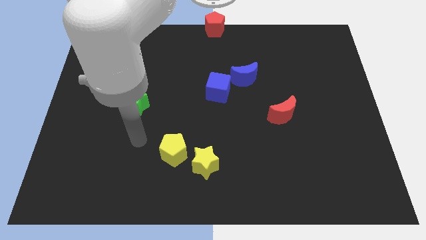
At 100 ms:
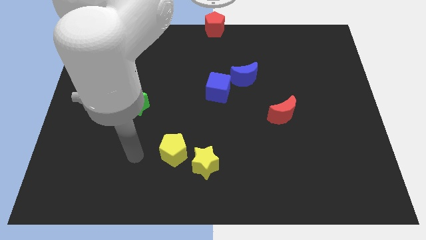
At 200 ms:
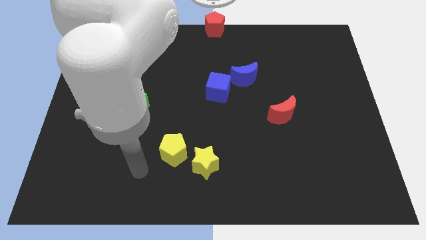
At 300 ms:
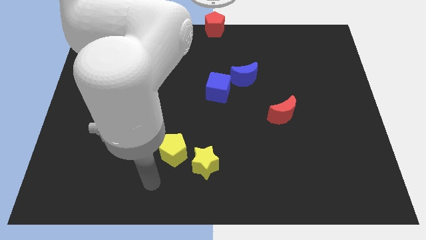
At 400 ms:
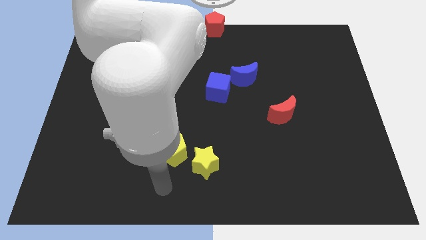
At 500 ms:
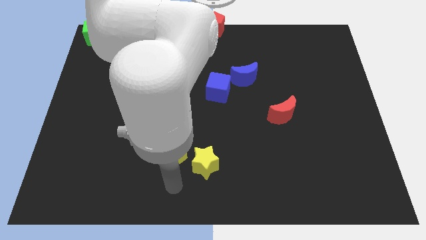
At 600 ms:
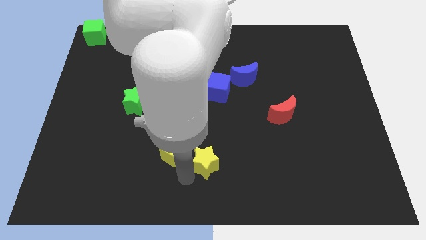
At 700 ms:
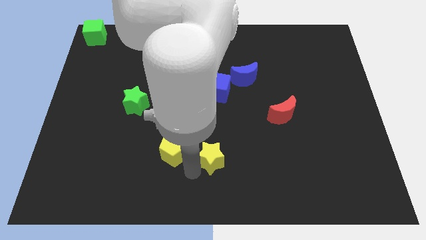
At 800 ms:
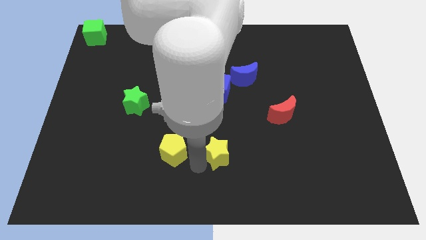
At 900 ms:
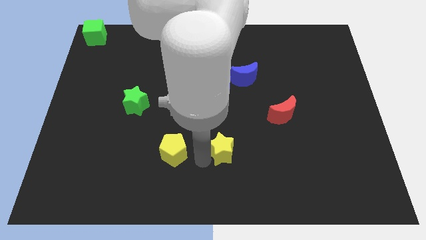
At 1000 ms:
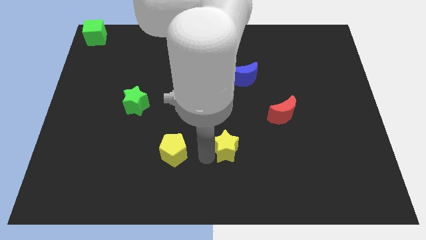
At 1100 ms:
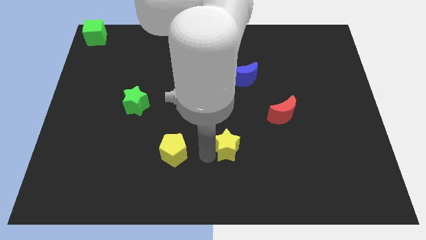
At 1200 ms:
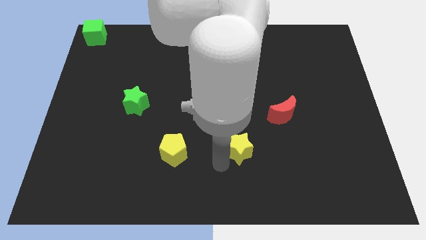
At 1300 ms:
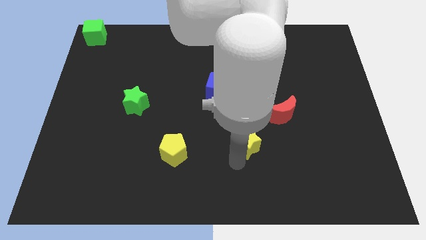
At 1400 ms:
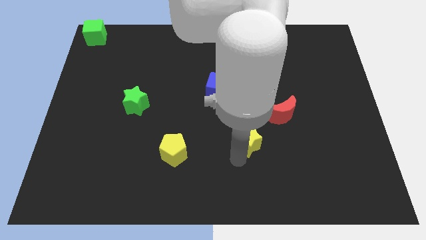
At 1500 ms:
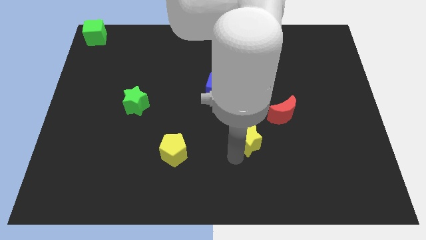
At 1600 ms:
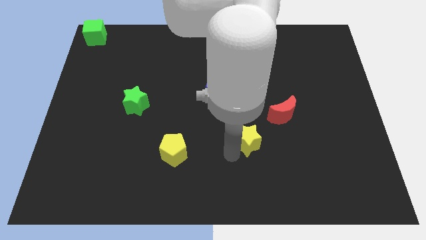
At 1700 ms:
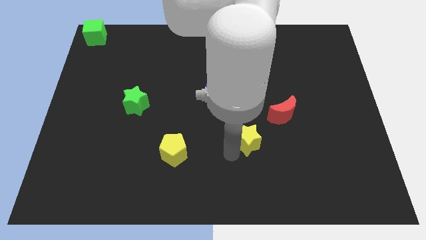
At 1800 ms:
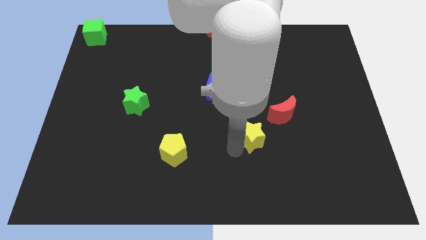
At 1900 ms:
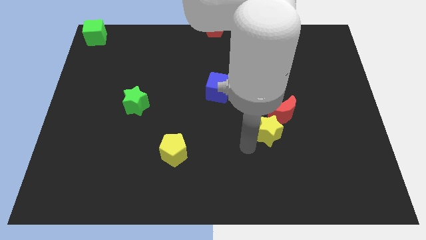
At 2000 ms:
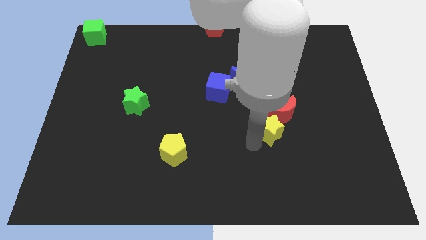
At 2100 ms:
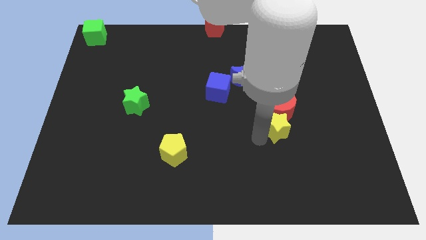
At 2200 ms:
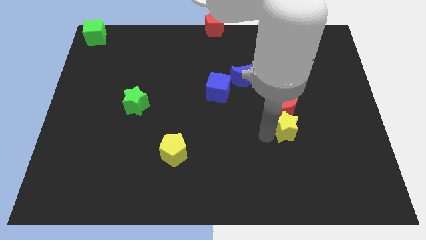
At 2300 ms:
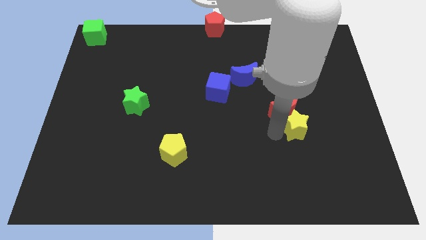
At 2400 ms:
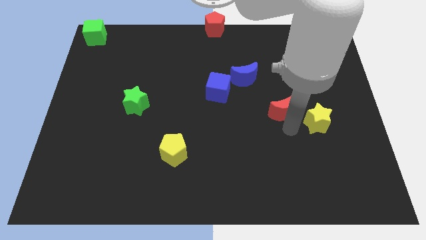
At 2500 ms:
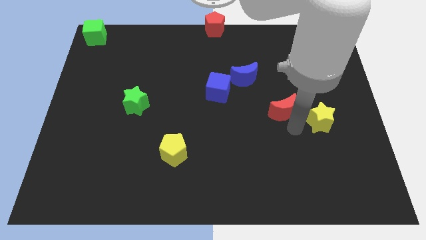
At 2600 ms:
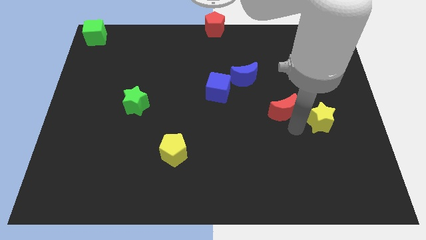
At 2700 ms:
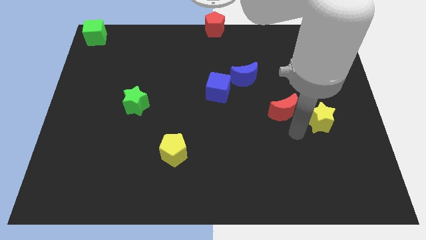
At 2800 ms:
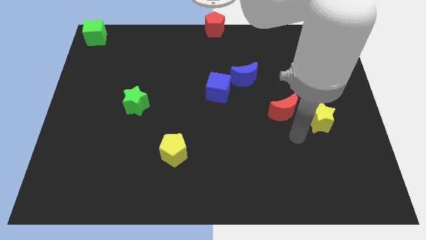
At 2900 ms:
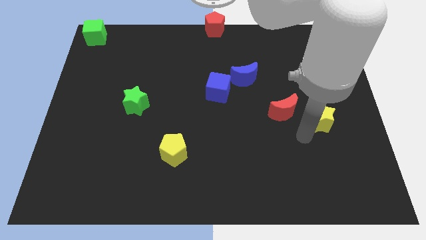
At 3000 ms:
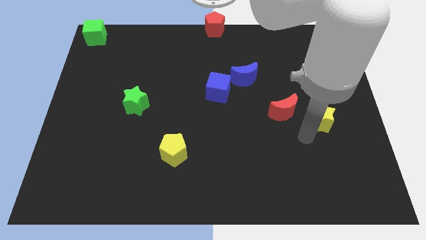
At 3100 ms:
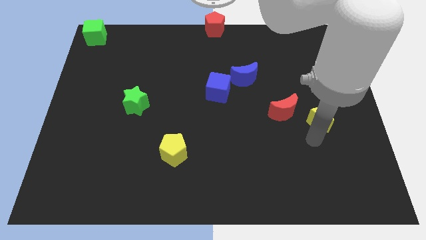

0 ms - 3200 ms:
push the yellow star towards center right

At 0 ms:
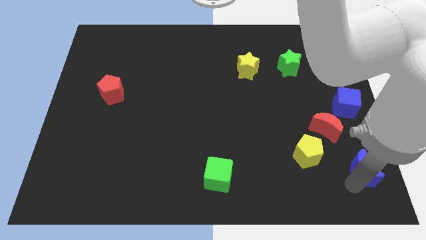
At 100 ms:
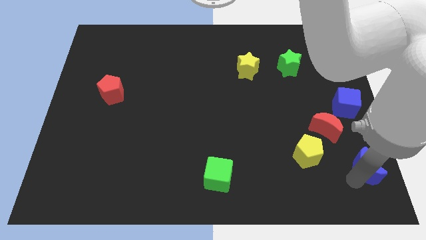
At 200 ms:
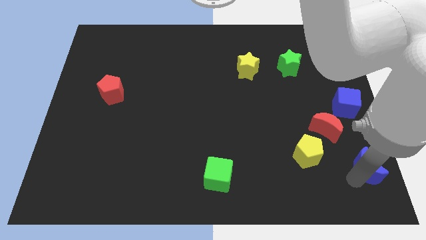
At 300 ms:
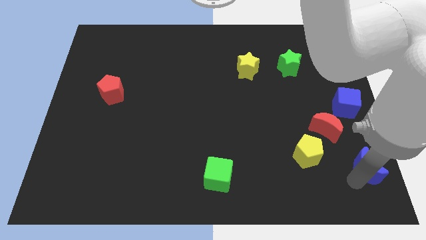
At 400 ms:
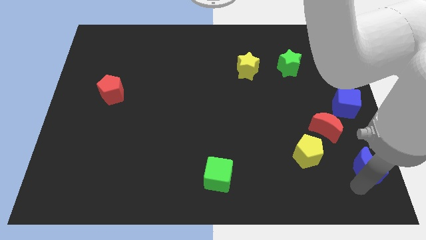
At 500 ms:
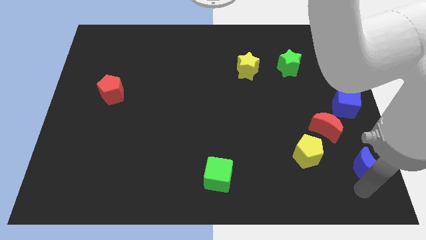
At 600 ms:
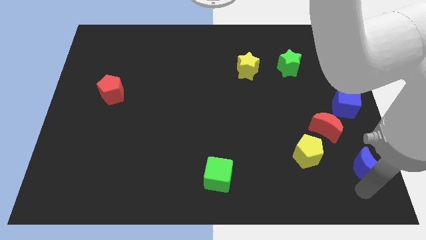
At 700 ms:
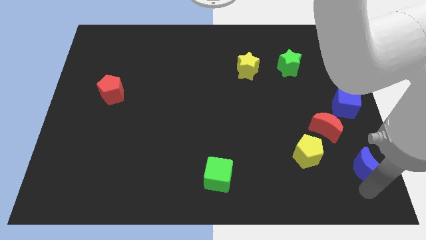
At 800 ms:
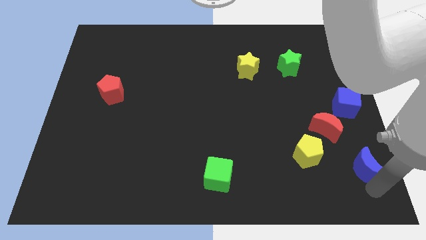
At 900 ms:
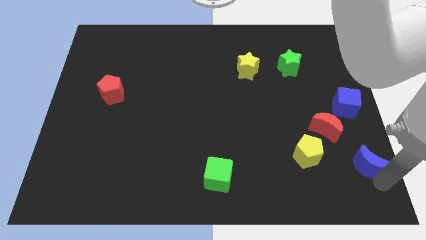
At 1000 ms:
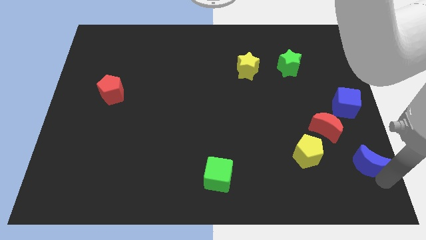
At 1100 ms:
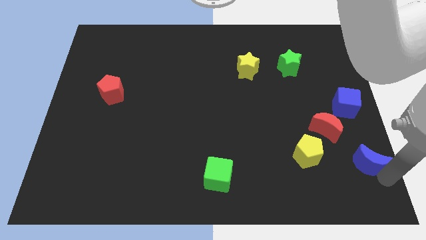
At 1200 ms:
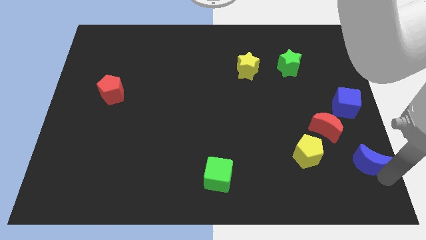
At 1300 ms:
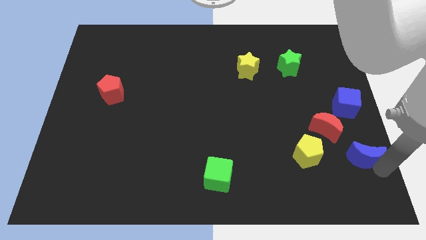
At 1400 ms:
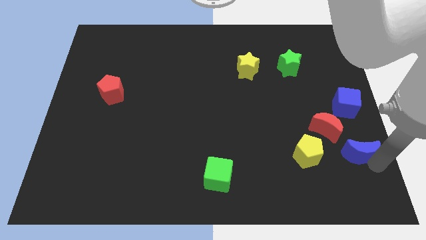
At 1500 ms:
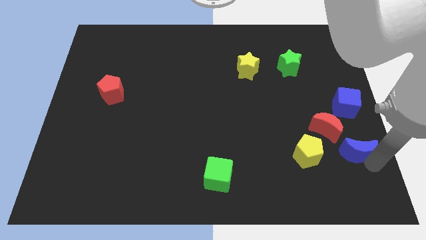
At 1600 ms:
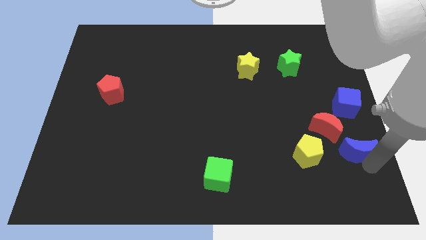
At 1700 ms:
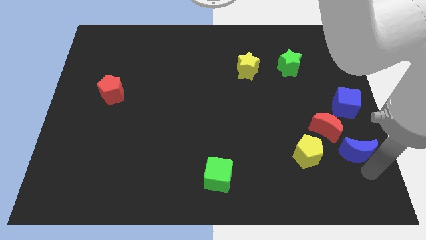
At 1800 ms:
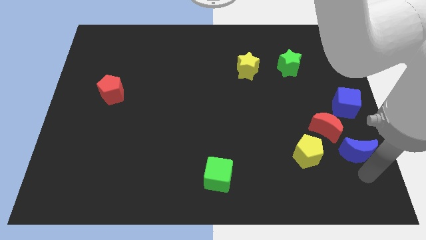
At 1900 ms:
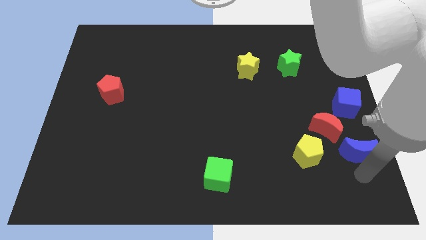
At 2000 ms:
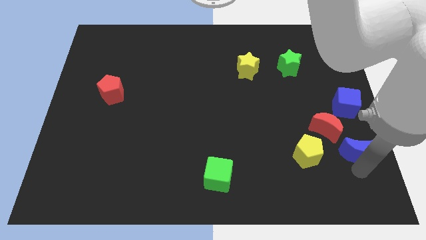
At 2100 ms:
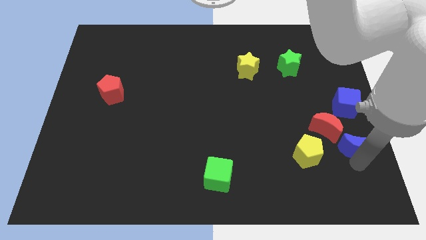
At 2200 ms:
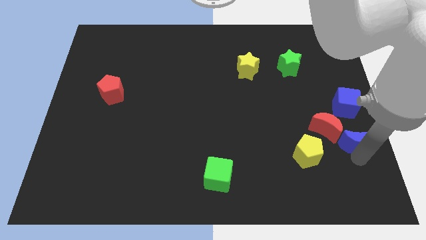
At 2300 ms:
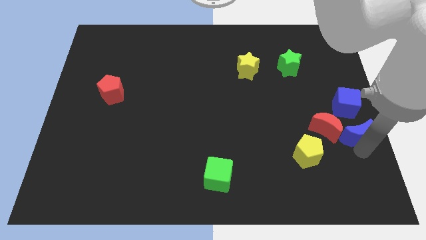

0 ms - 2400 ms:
place blue moon to the right of red moon

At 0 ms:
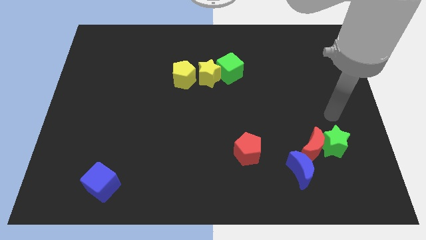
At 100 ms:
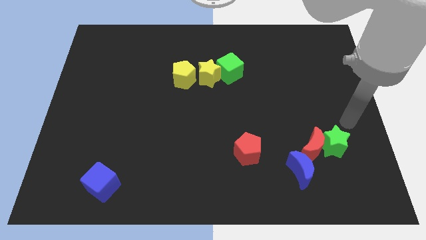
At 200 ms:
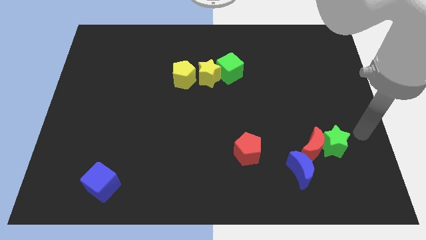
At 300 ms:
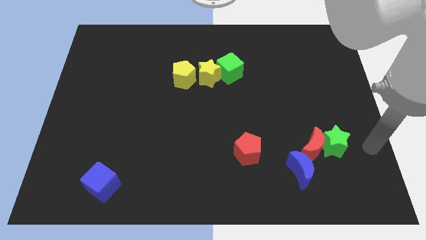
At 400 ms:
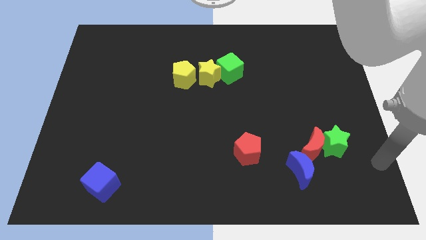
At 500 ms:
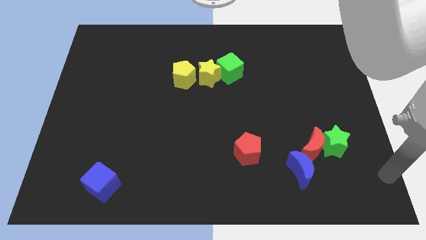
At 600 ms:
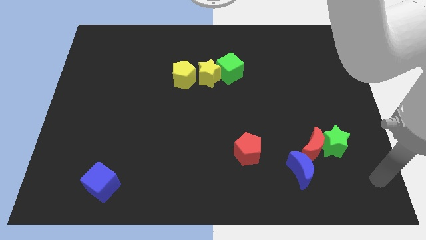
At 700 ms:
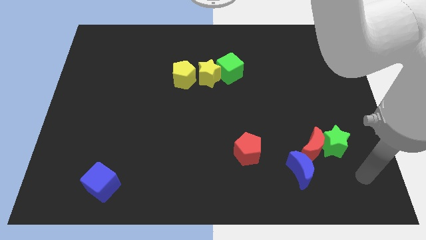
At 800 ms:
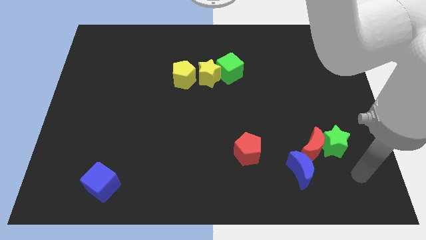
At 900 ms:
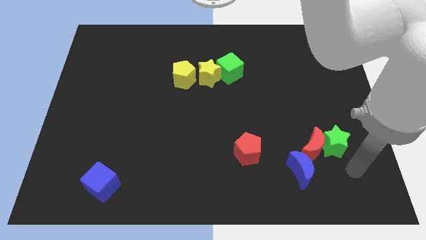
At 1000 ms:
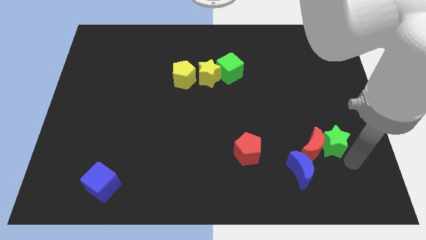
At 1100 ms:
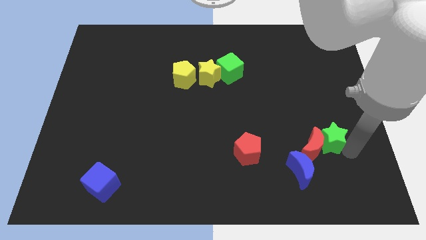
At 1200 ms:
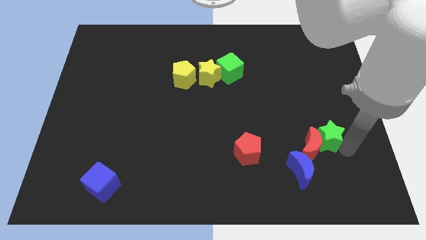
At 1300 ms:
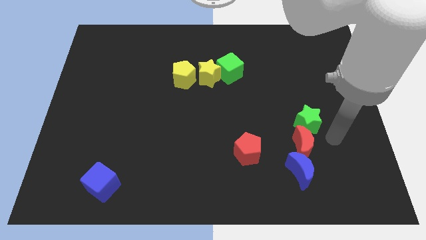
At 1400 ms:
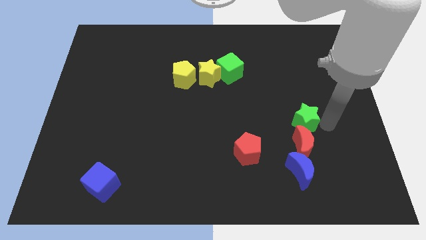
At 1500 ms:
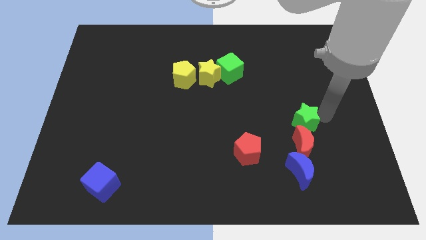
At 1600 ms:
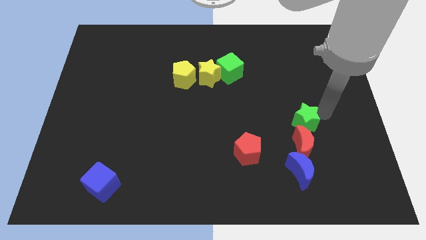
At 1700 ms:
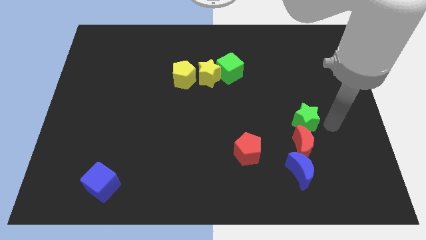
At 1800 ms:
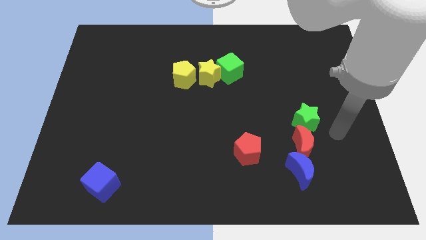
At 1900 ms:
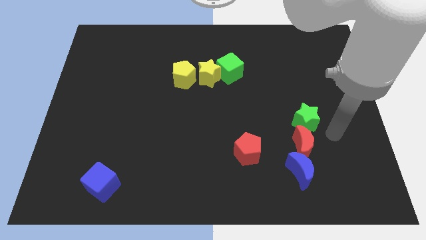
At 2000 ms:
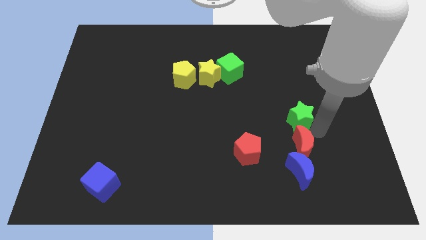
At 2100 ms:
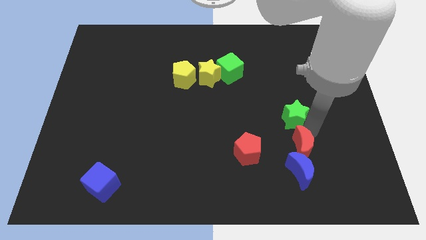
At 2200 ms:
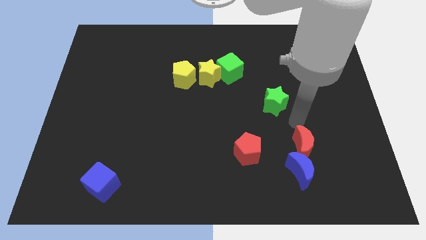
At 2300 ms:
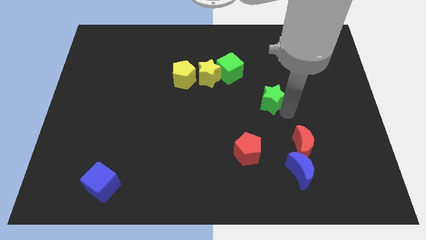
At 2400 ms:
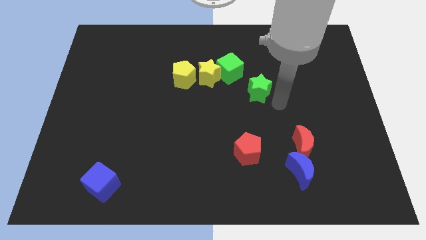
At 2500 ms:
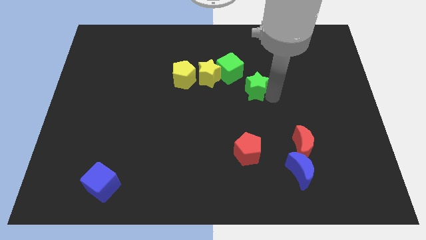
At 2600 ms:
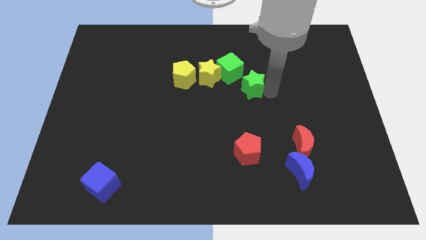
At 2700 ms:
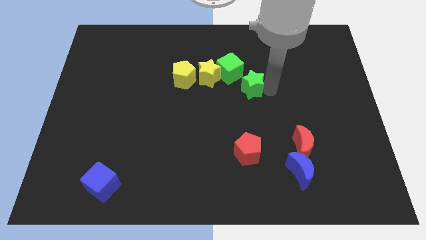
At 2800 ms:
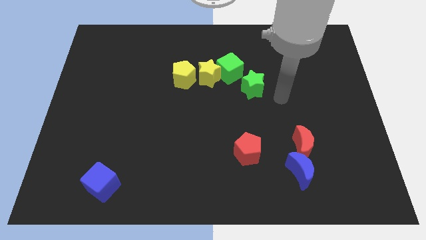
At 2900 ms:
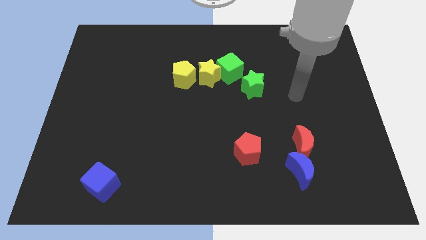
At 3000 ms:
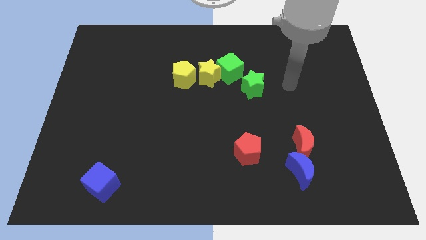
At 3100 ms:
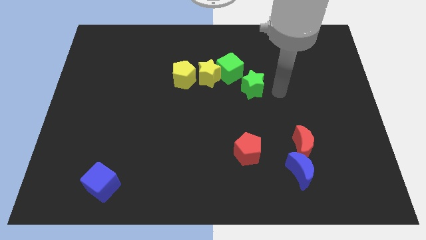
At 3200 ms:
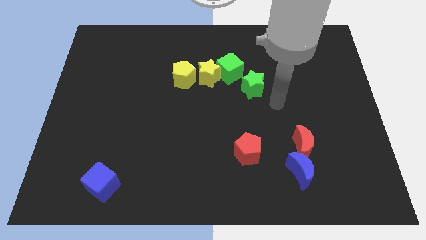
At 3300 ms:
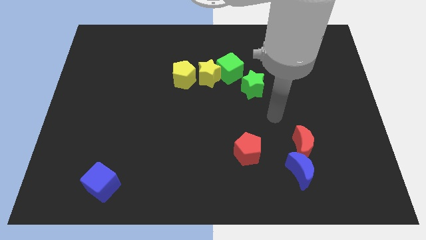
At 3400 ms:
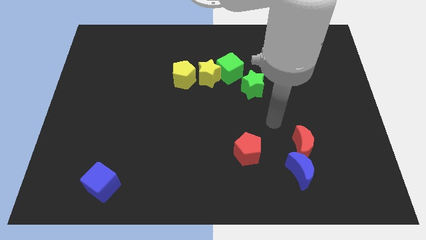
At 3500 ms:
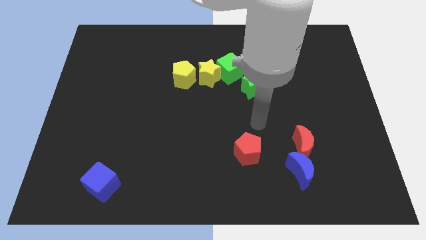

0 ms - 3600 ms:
push the green star towards the bottom of the green cube
